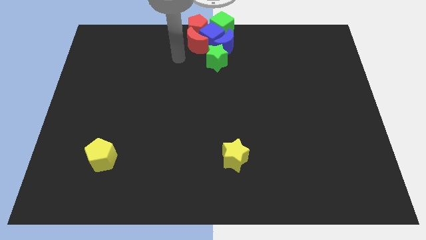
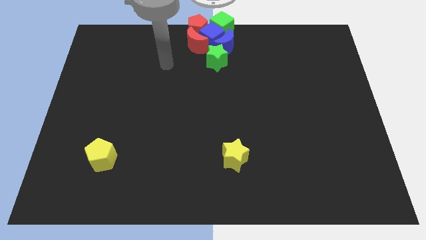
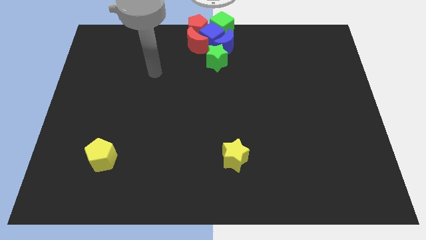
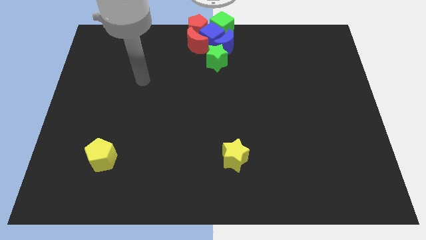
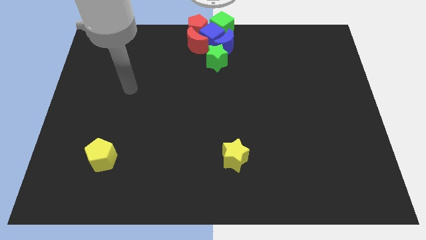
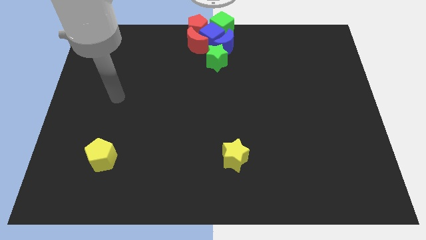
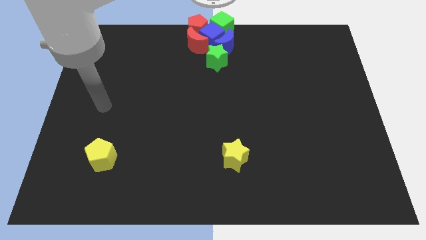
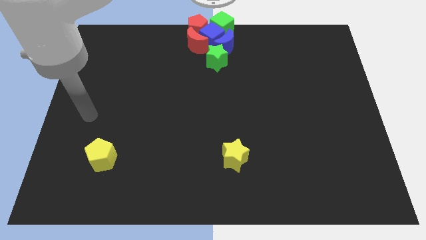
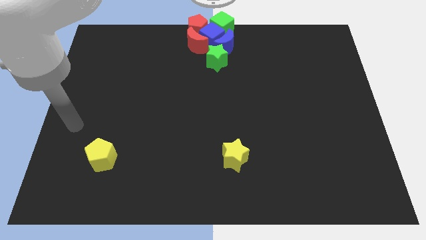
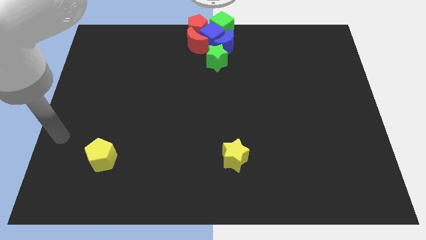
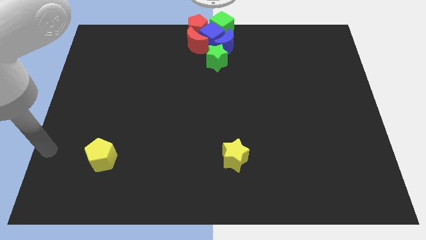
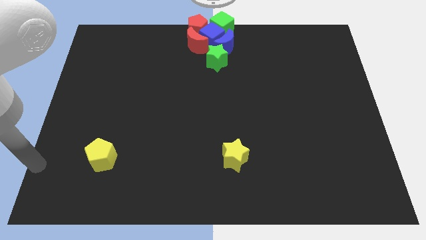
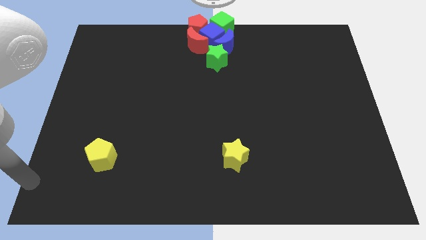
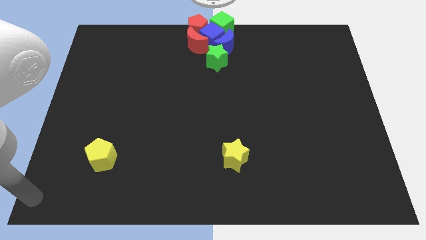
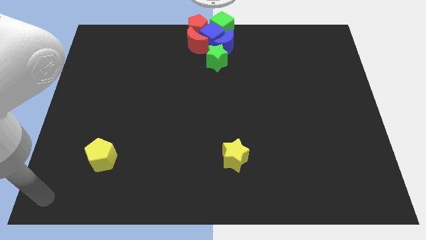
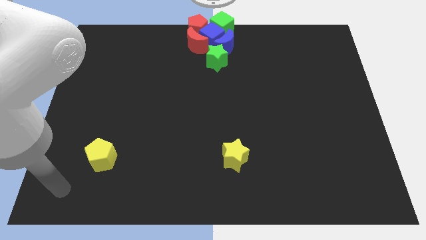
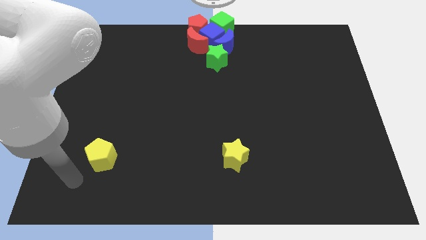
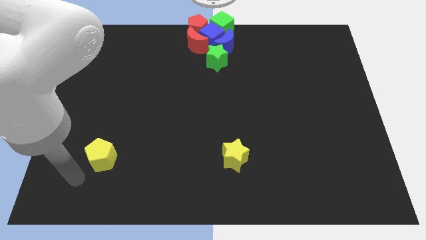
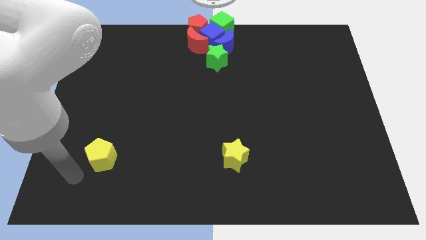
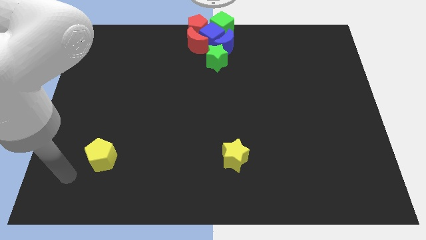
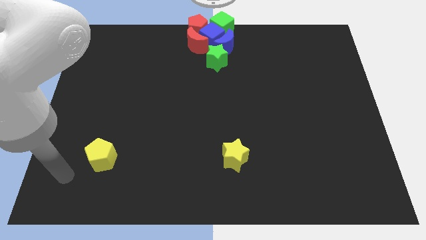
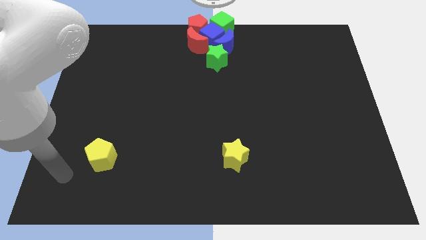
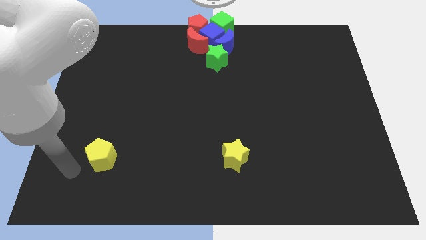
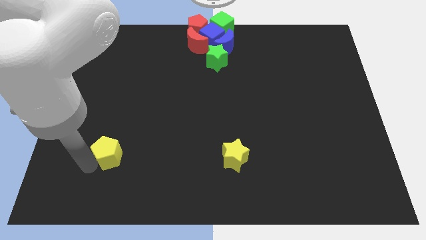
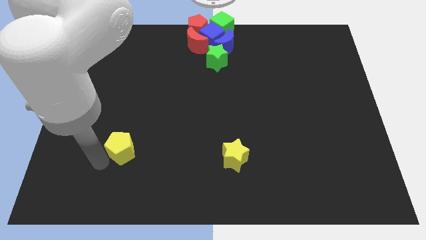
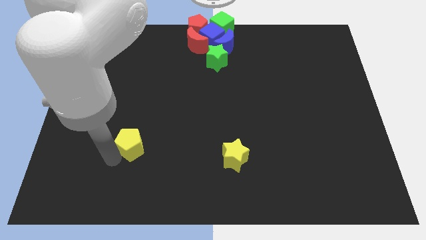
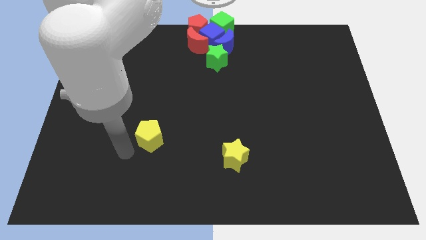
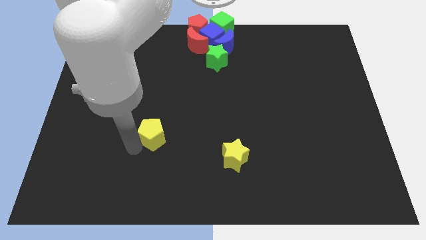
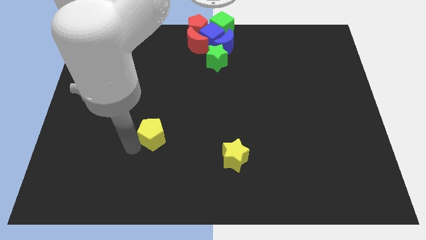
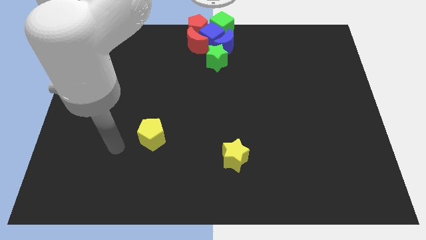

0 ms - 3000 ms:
place the yellow pentagon to the center of the board

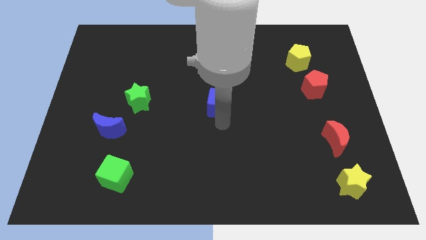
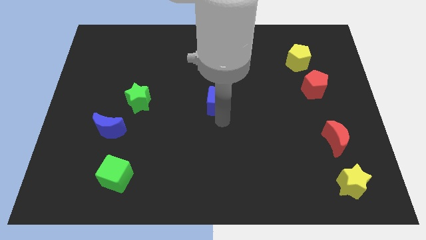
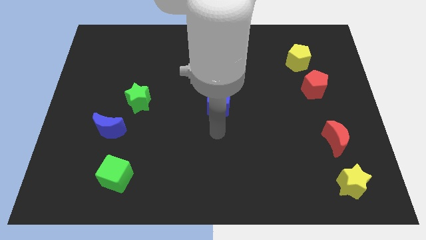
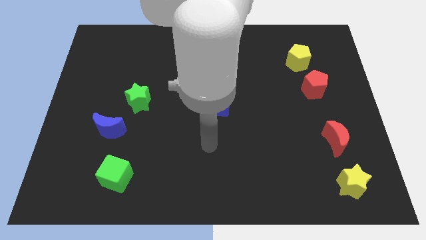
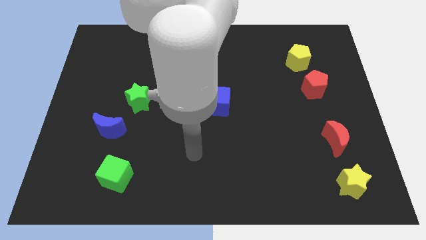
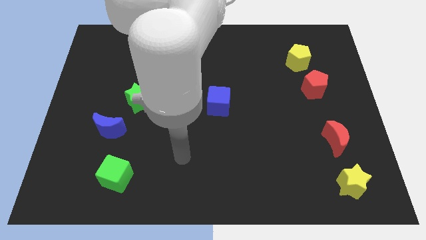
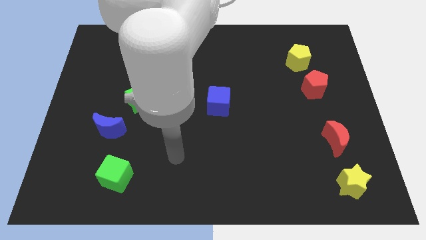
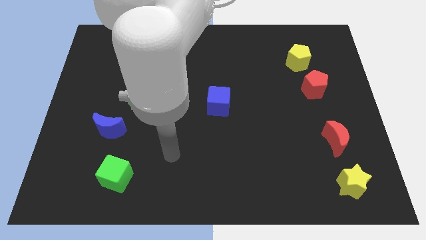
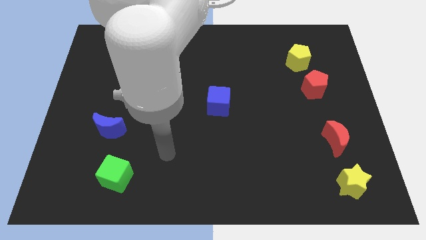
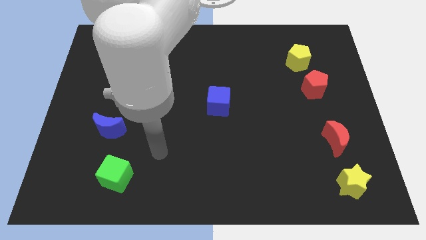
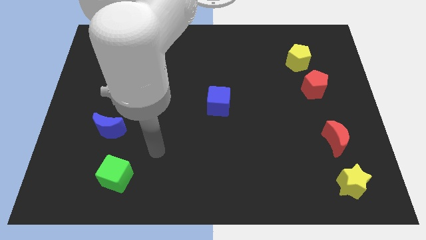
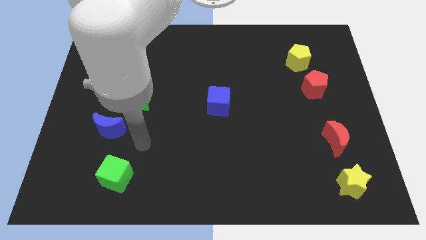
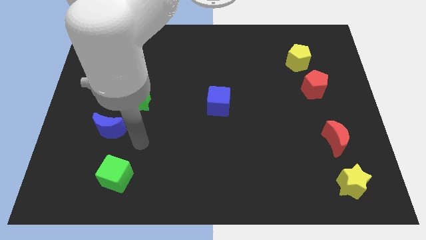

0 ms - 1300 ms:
move the arm to the right side of the blue crescent

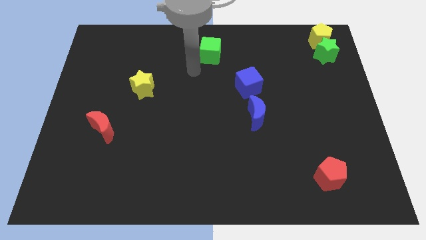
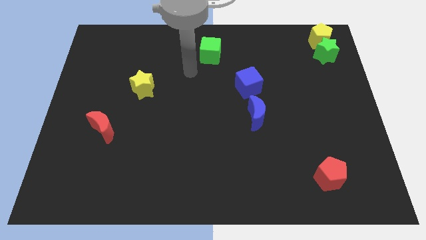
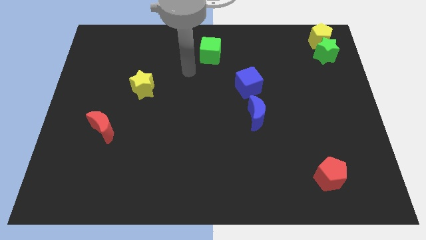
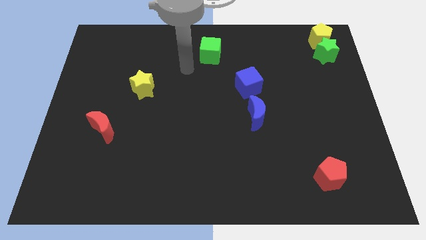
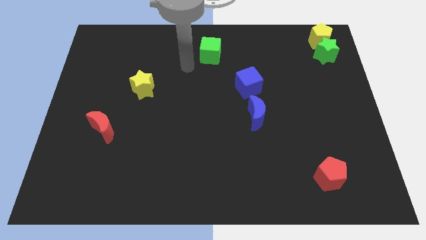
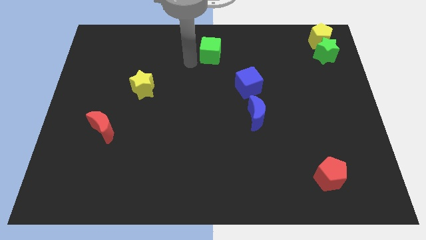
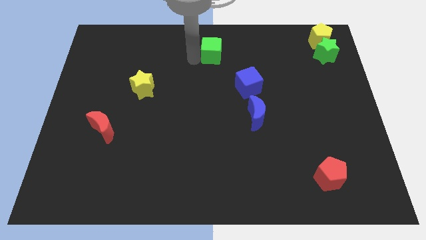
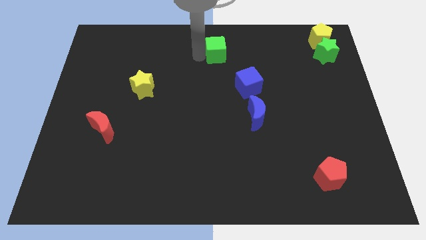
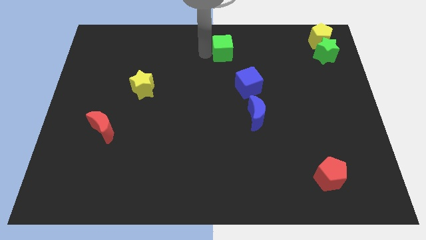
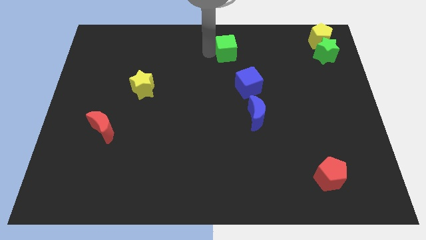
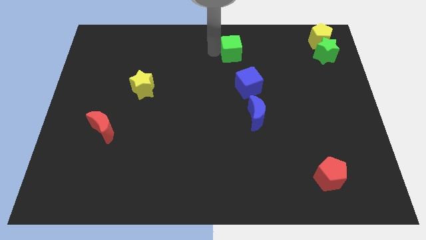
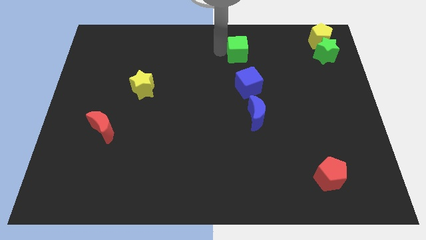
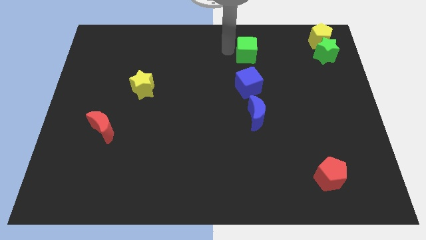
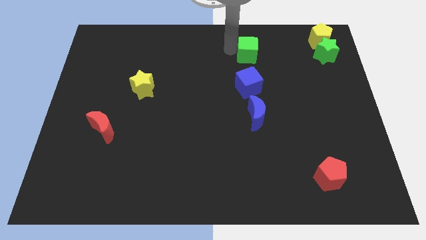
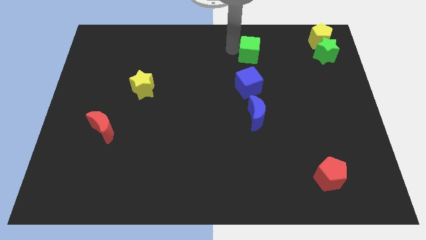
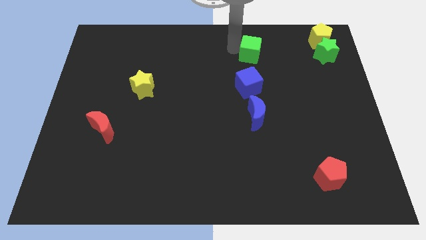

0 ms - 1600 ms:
move the green cube to the top of the blue cube

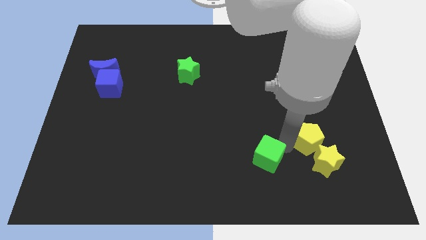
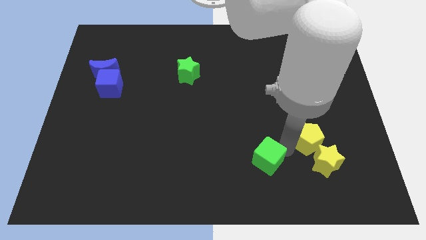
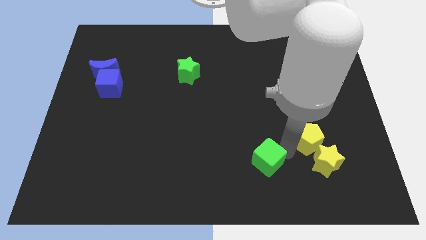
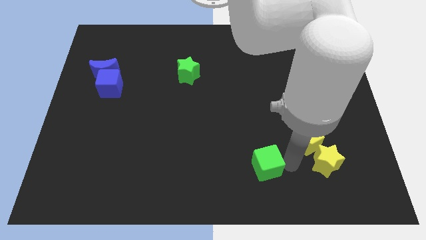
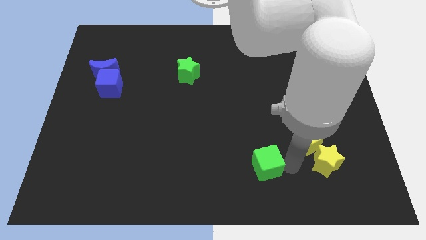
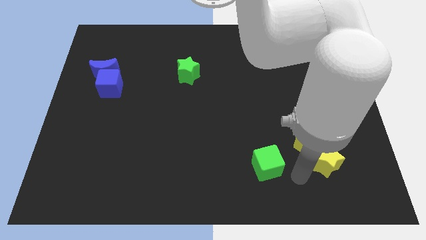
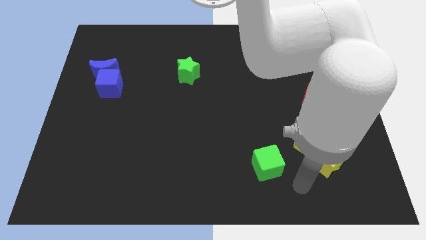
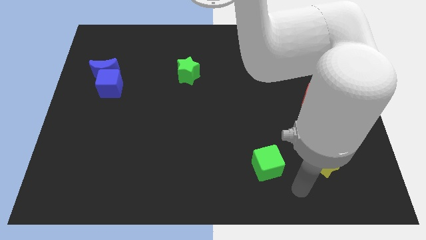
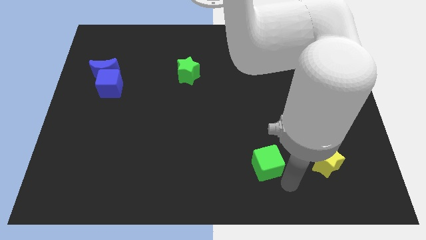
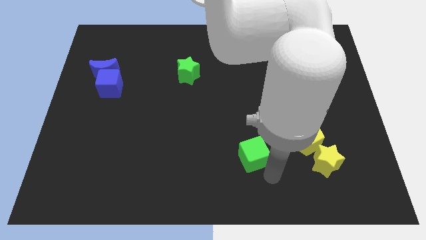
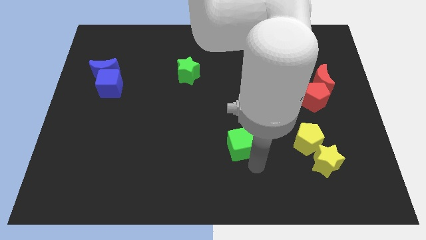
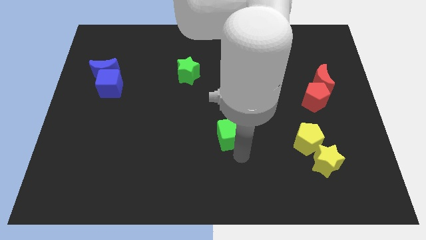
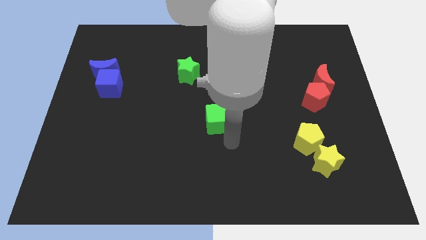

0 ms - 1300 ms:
move the green cube towards the bottom side of the green star

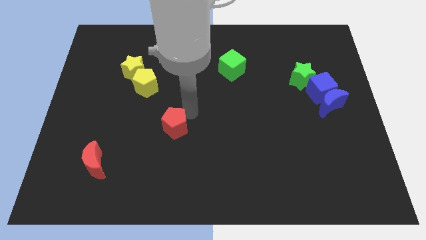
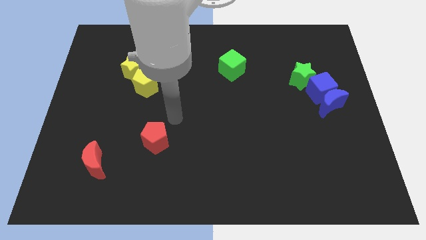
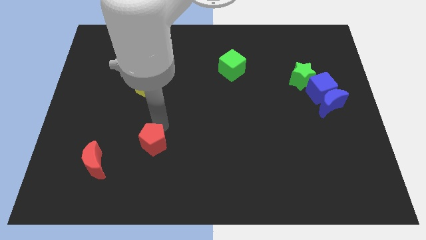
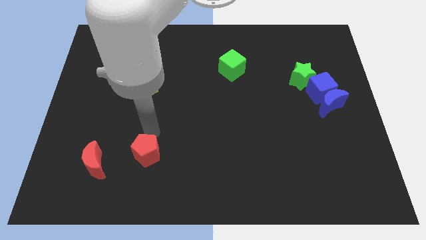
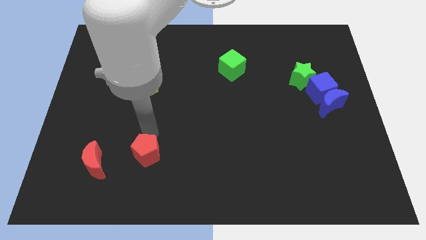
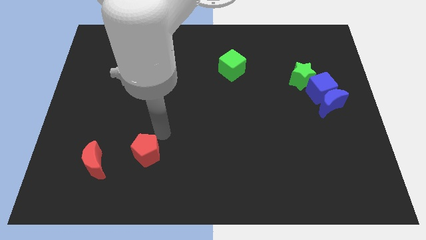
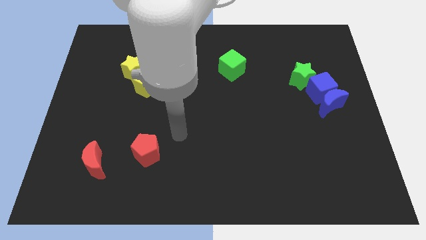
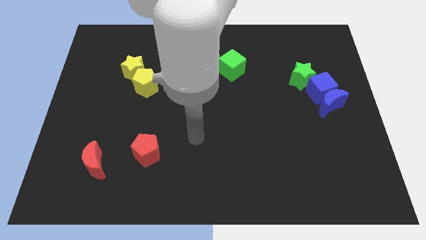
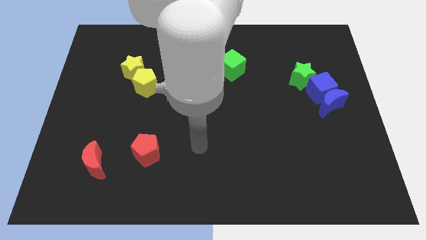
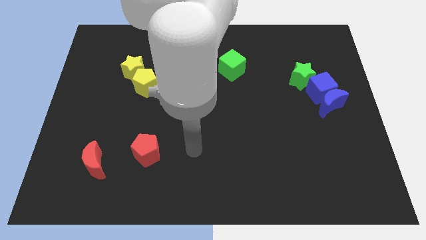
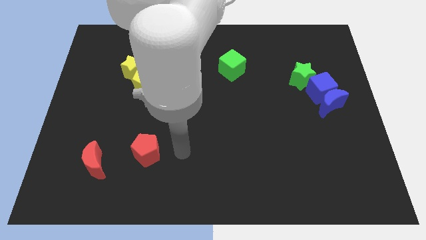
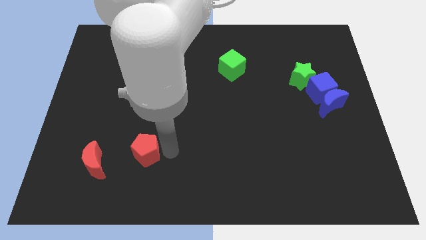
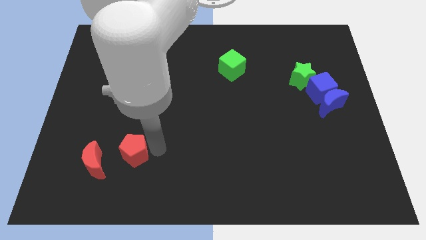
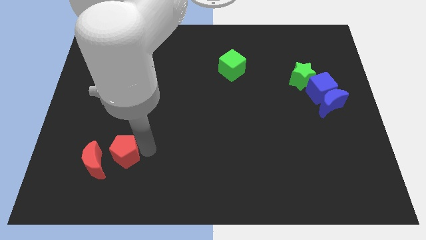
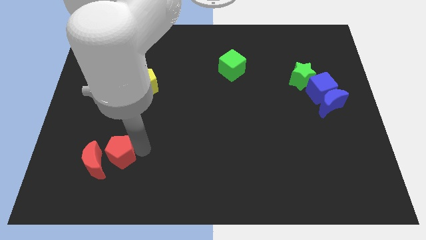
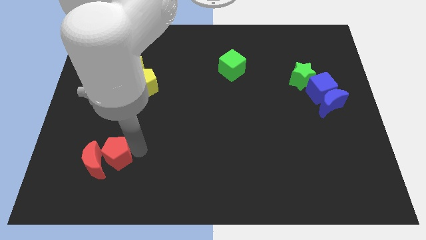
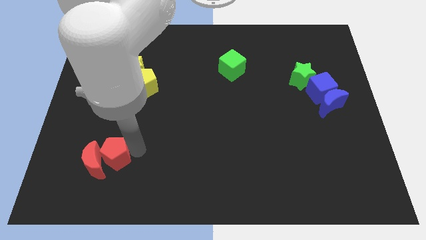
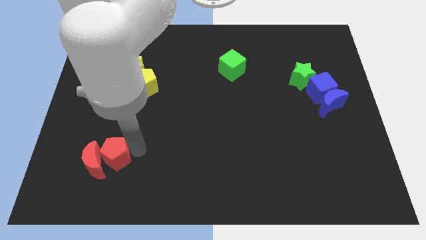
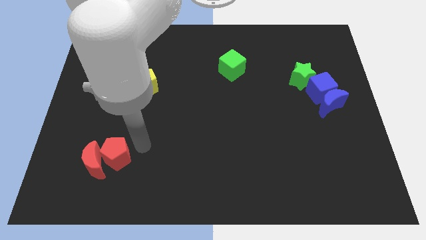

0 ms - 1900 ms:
move the red pentagon to the right side of the red crescent
